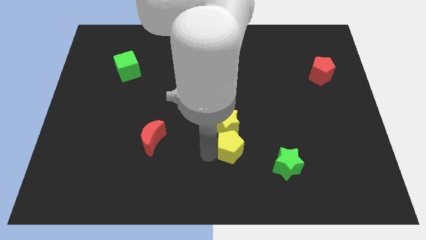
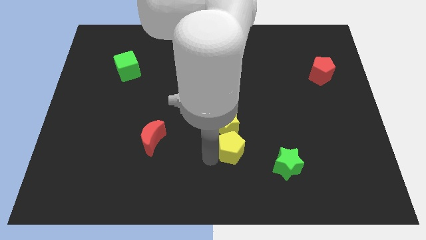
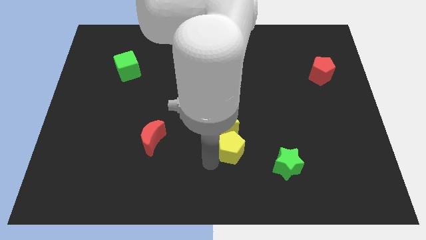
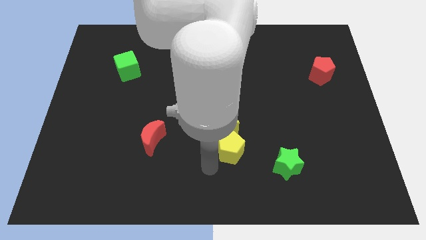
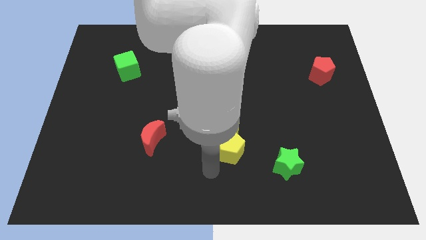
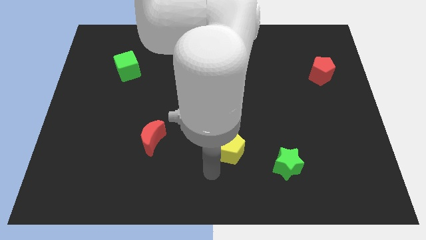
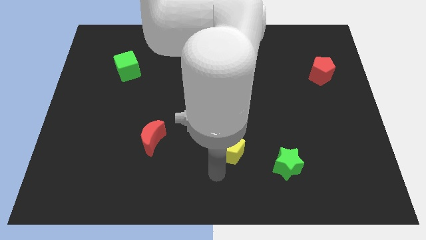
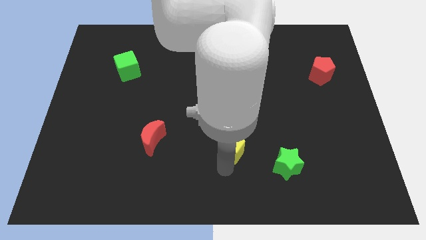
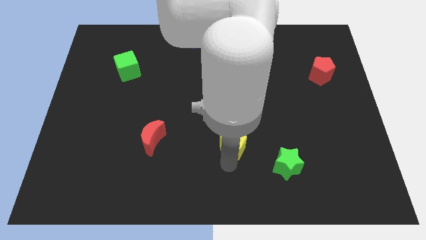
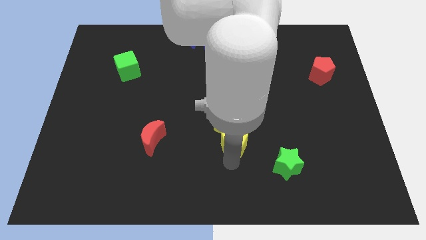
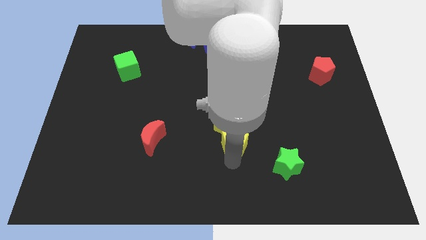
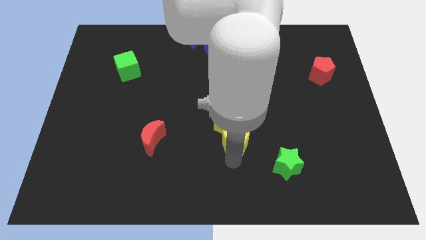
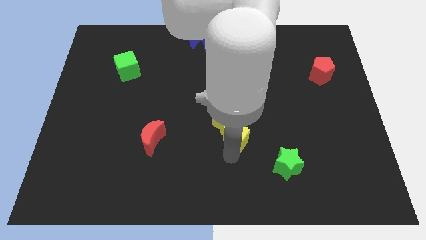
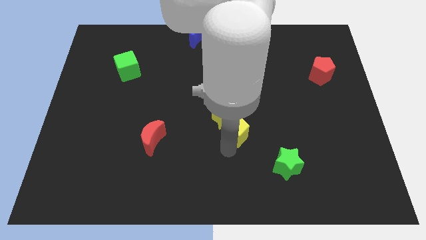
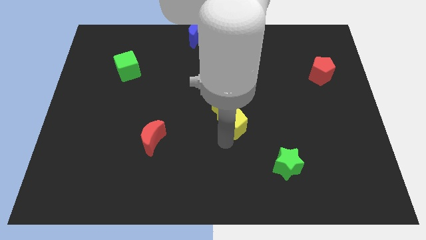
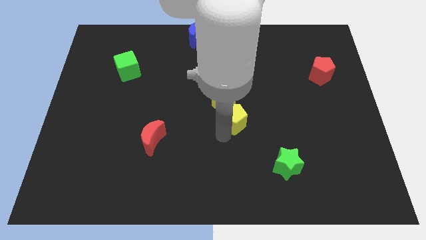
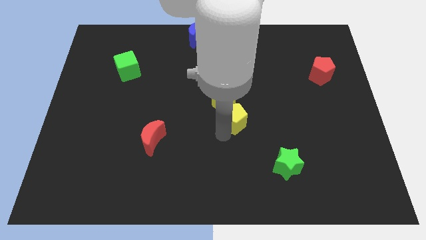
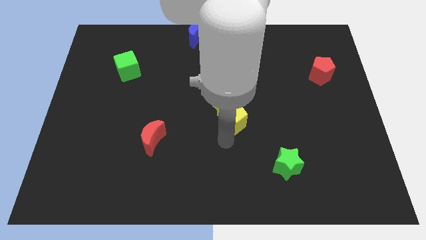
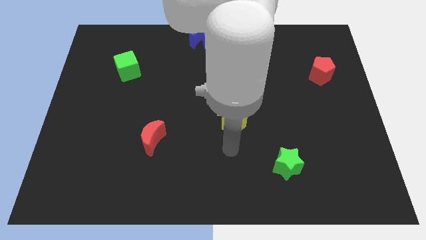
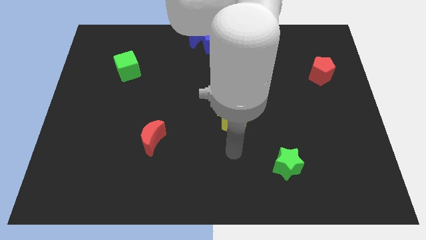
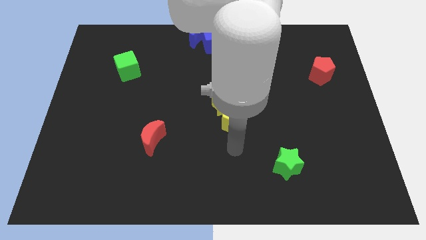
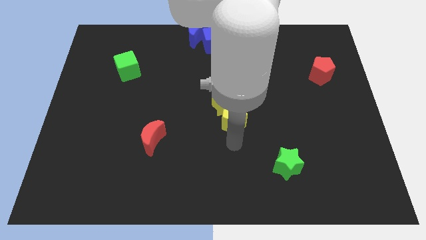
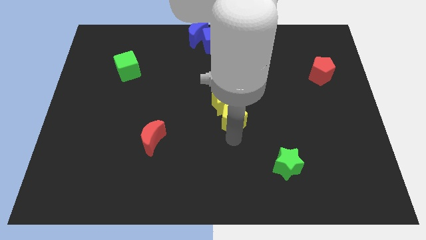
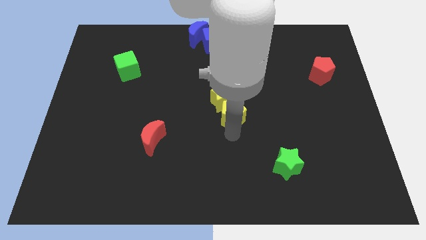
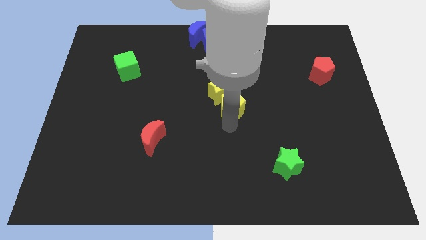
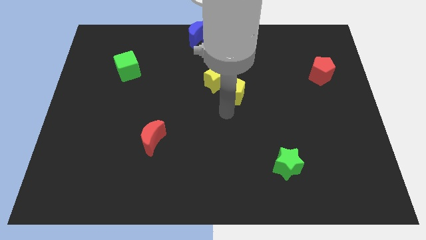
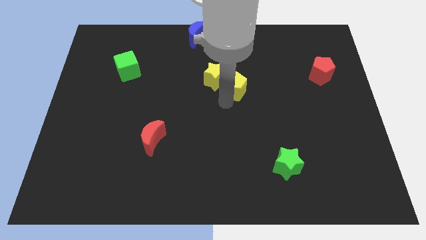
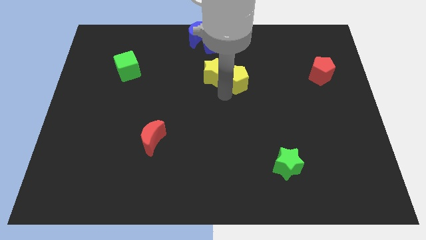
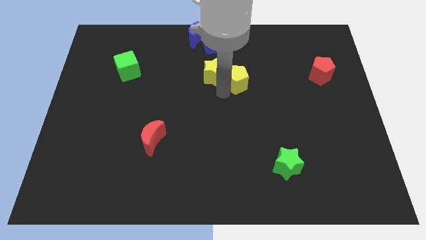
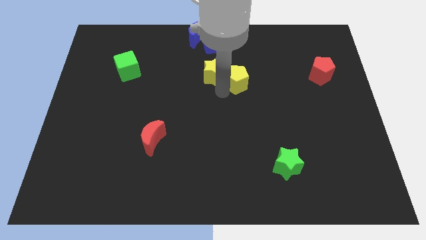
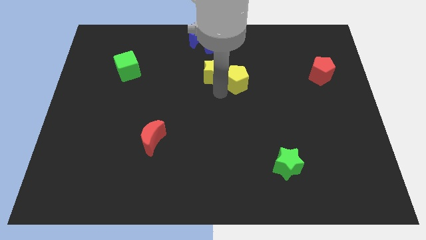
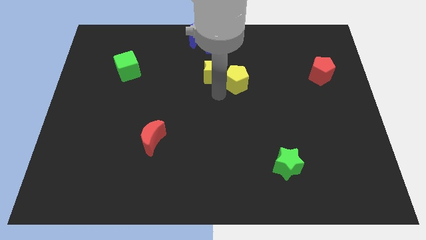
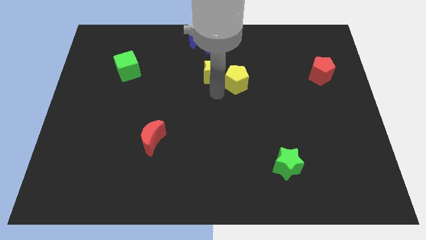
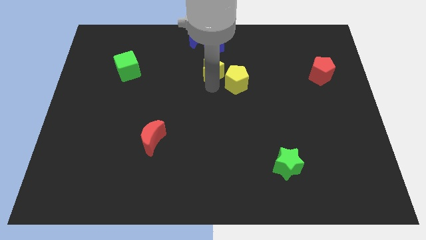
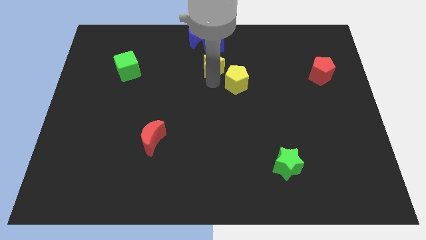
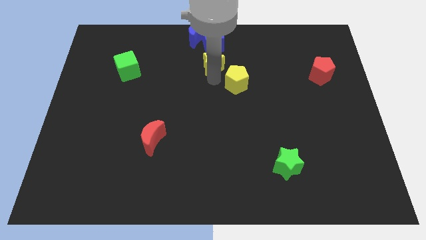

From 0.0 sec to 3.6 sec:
push the yellow pentagon and yellow star slightly upwards

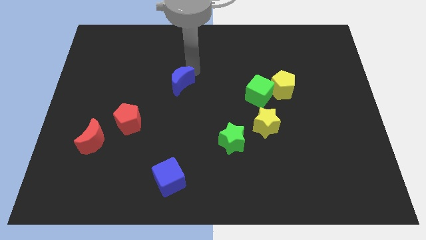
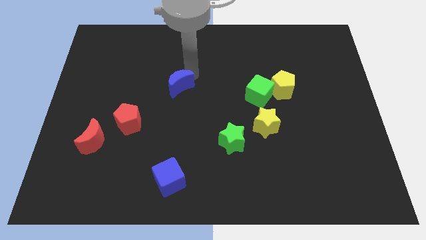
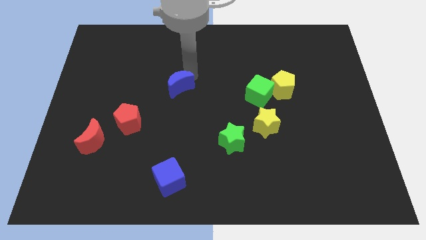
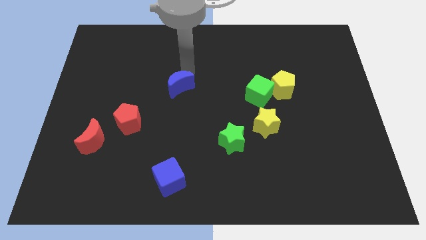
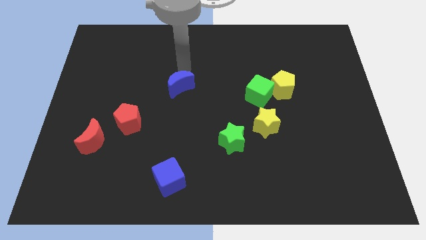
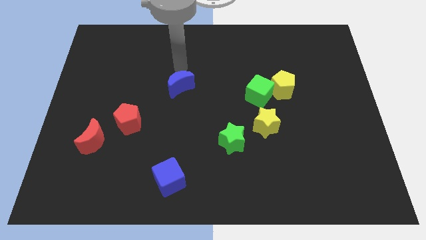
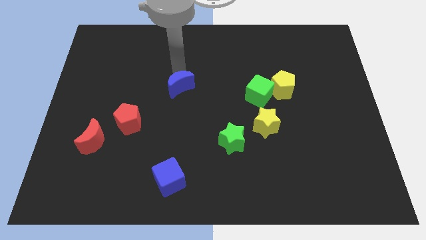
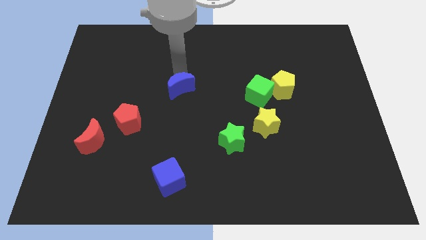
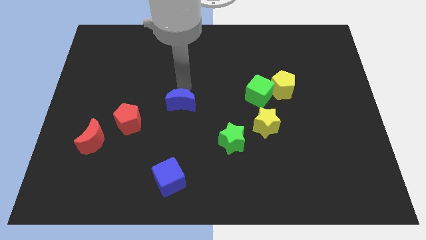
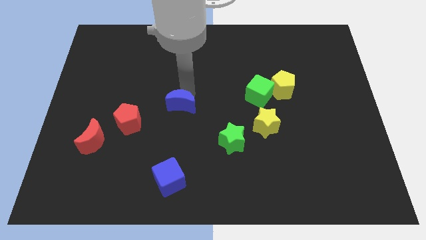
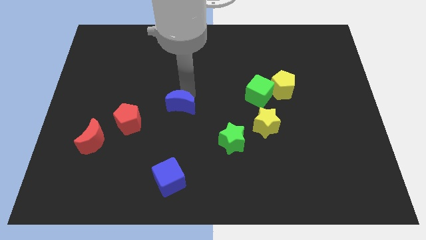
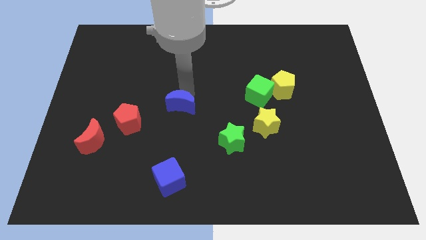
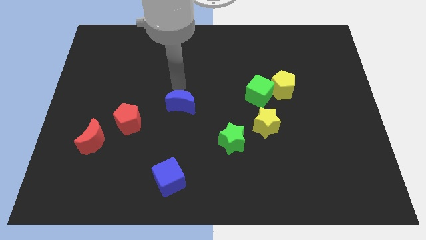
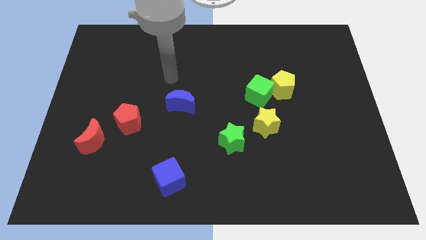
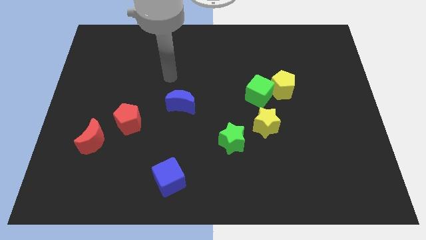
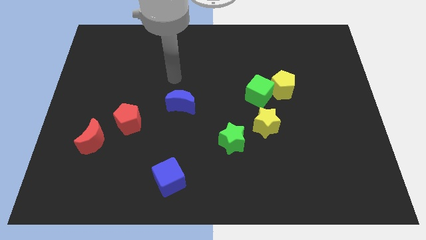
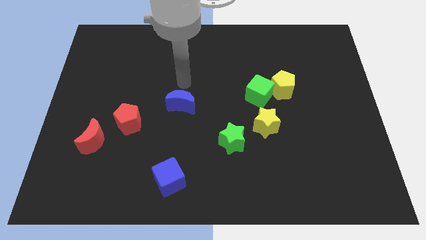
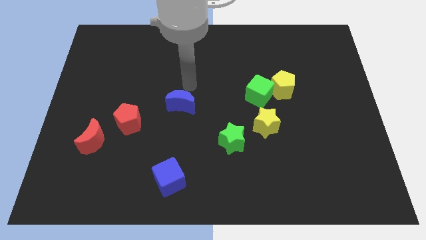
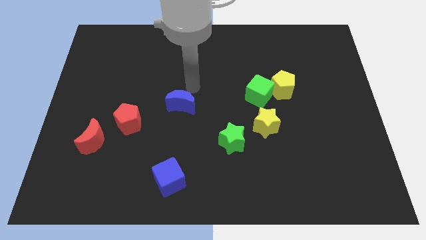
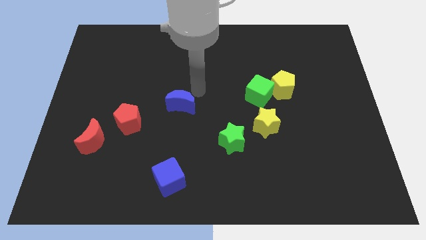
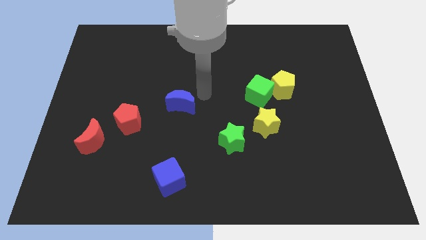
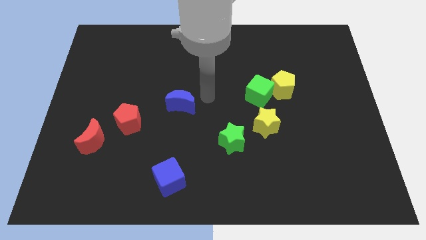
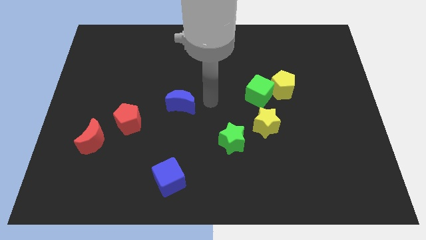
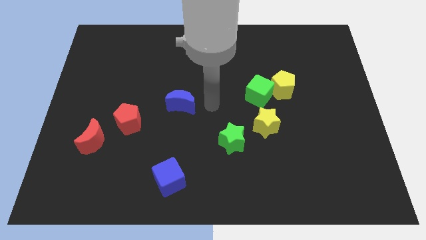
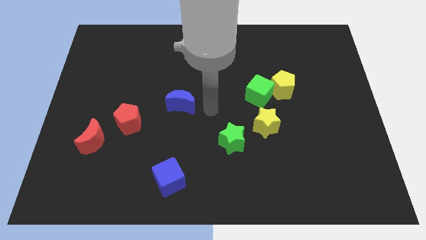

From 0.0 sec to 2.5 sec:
place the blue moon at the top of blue cube vertically

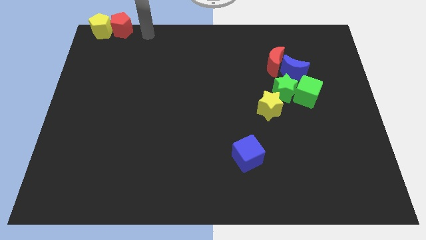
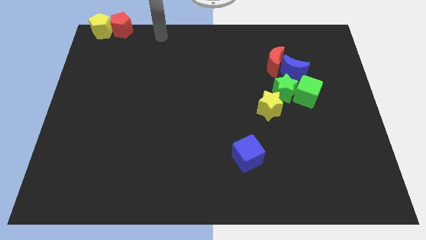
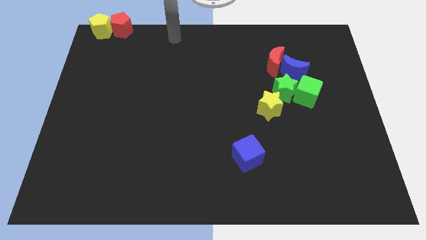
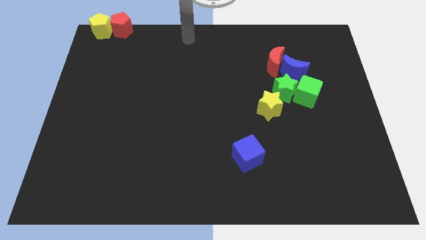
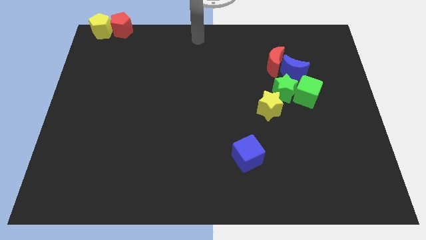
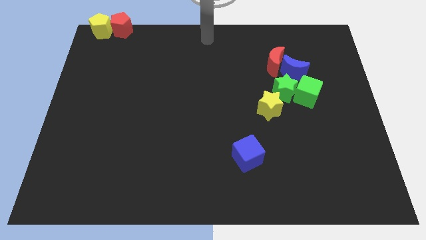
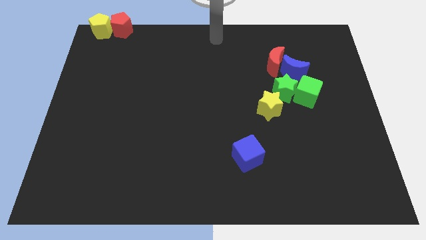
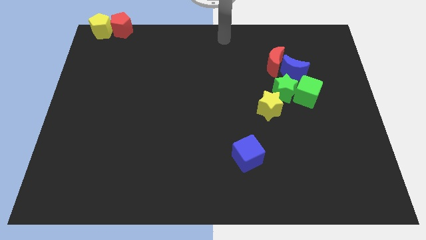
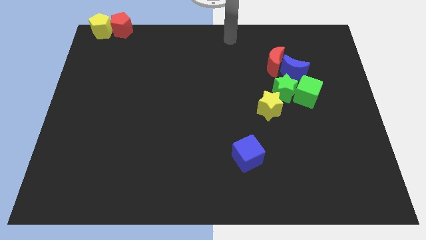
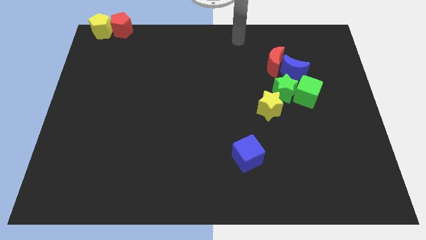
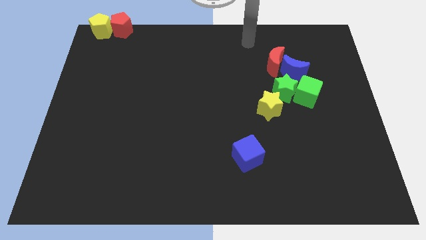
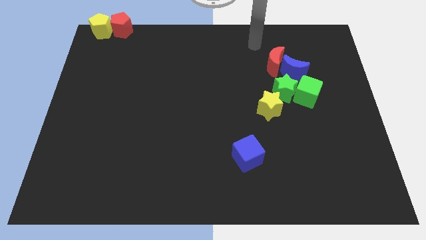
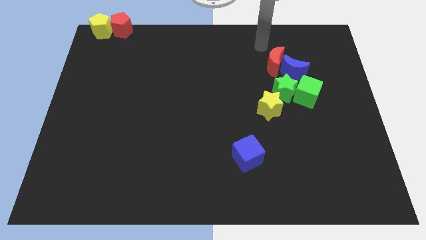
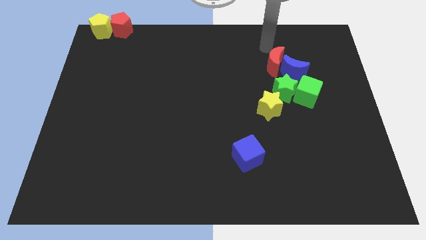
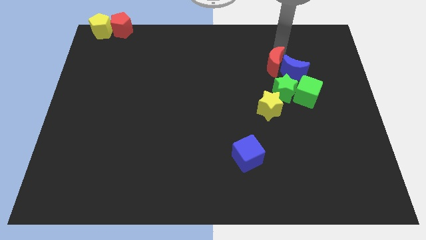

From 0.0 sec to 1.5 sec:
move your arm to the top of red moon

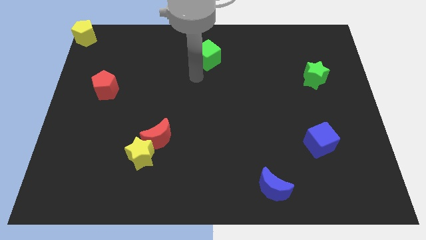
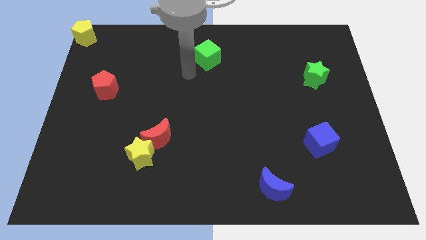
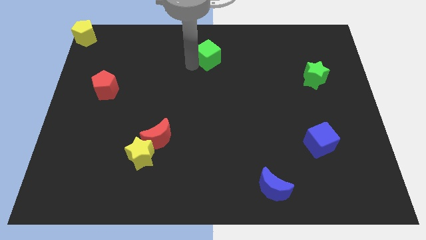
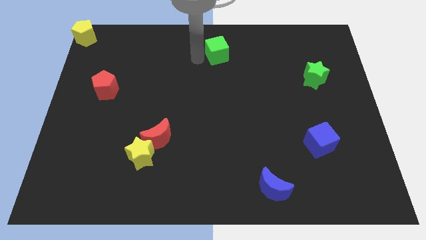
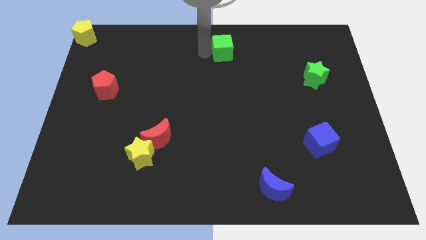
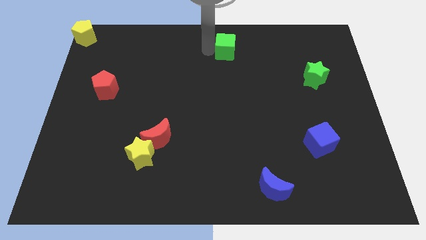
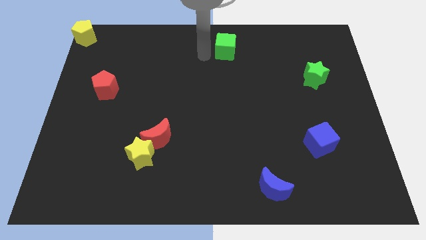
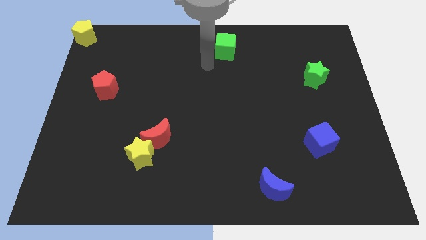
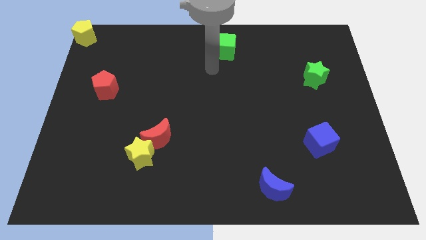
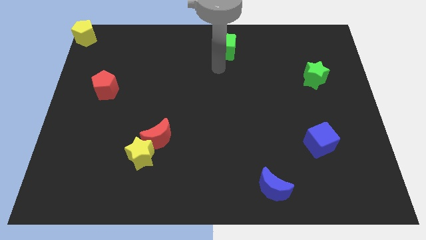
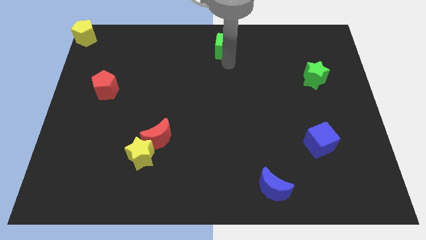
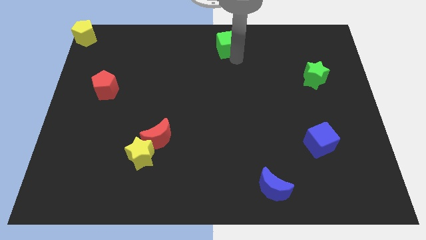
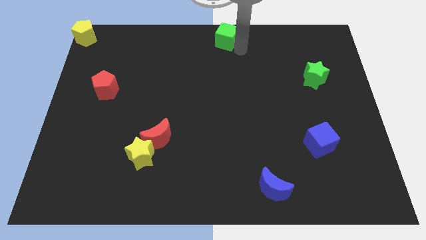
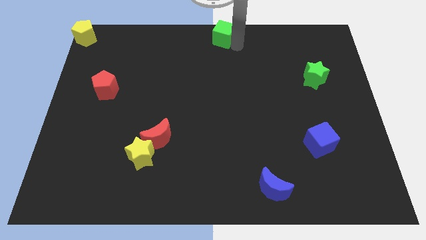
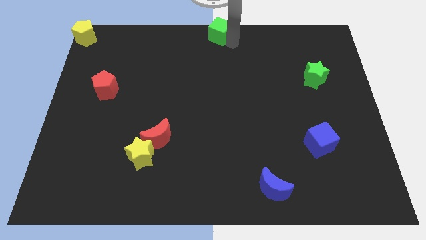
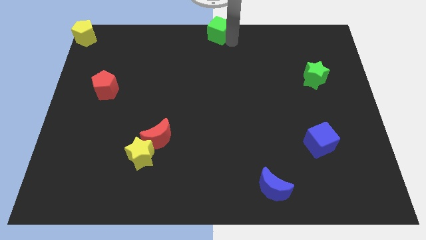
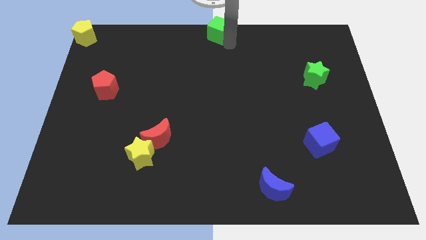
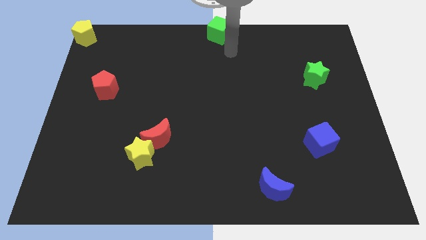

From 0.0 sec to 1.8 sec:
move the green cube to the top center
